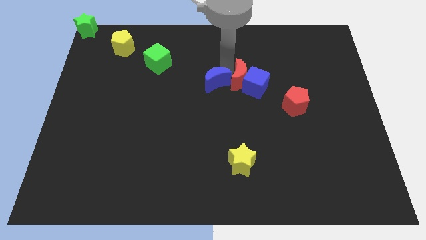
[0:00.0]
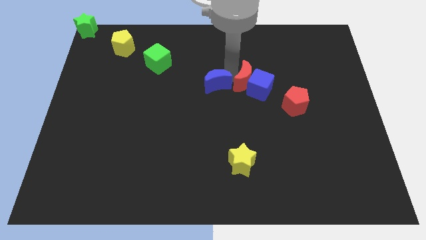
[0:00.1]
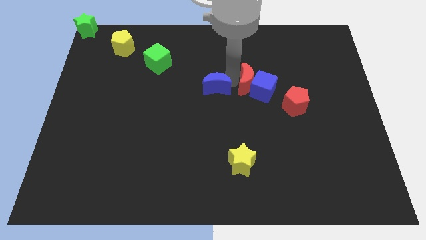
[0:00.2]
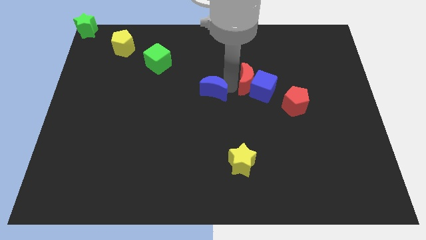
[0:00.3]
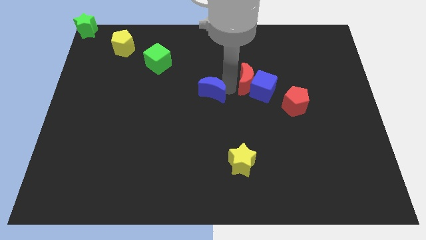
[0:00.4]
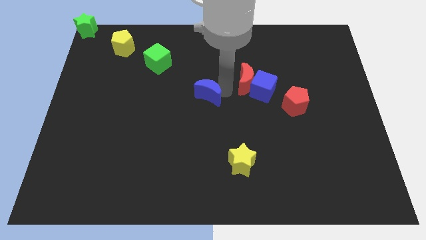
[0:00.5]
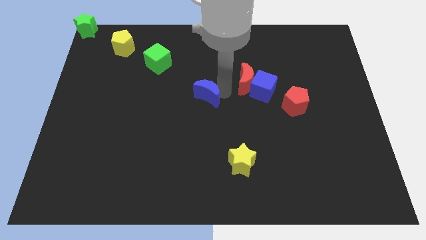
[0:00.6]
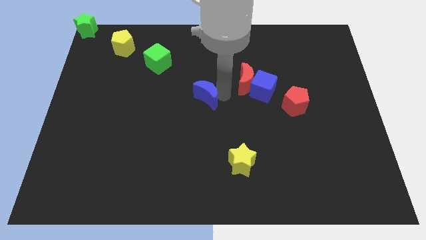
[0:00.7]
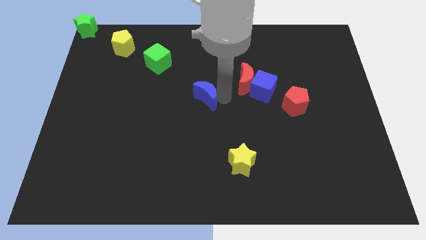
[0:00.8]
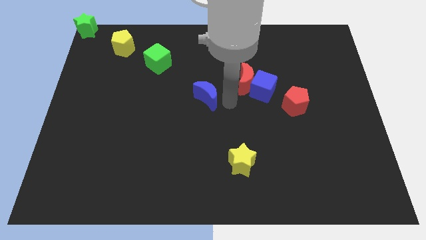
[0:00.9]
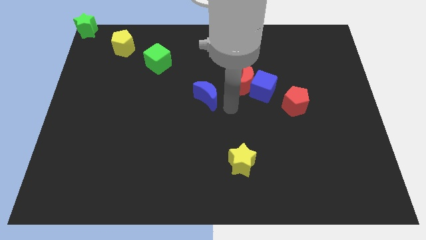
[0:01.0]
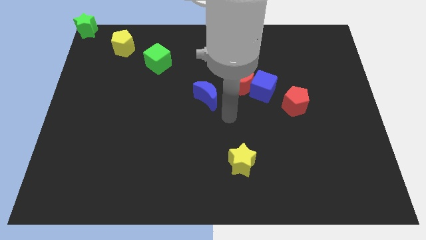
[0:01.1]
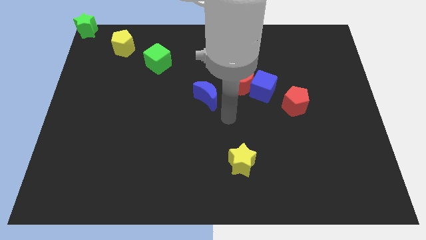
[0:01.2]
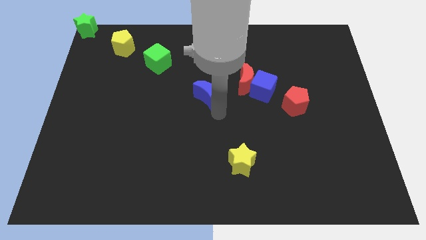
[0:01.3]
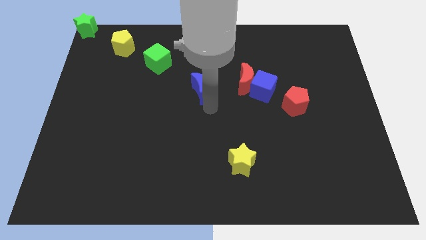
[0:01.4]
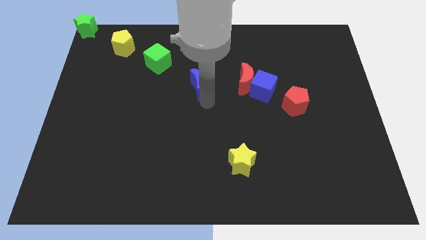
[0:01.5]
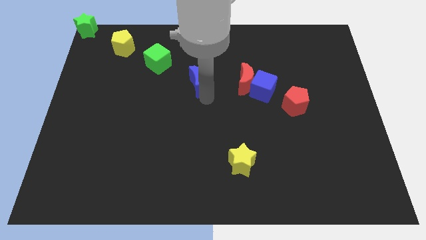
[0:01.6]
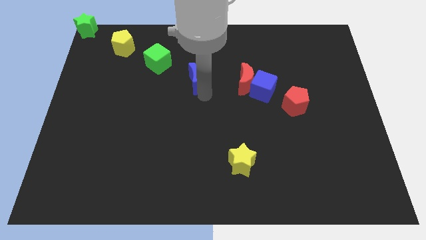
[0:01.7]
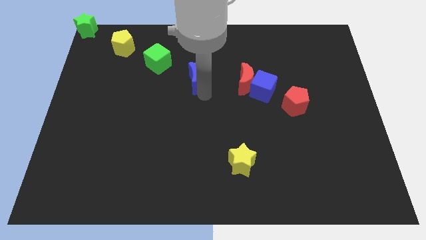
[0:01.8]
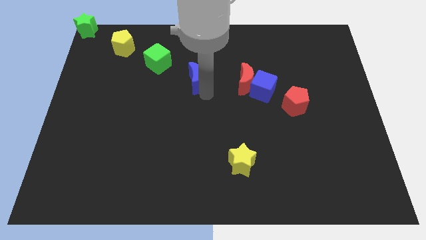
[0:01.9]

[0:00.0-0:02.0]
move the blue crescent away from the left side of the red moon

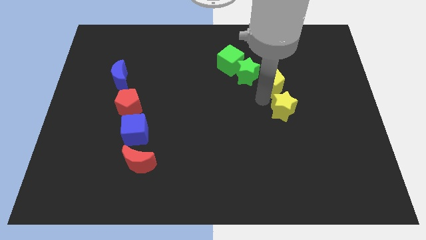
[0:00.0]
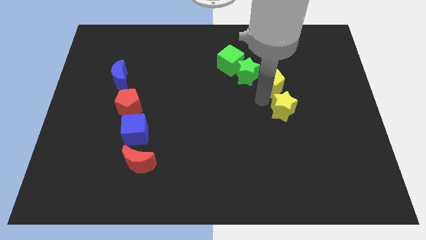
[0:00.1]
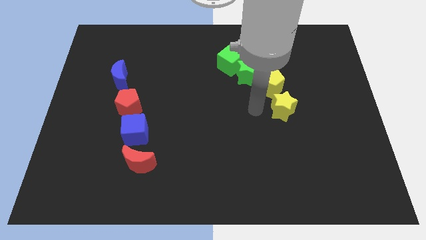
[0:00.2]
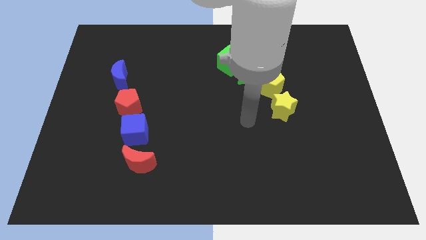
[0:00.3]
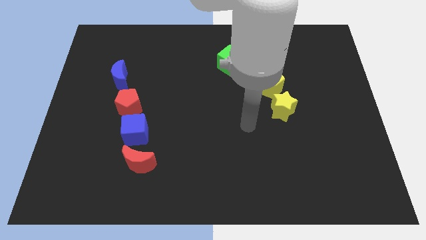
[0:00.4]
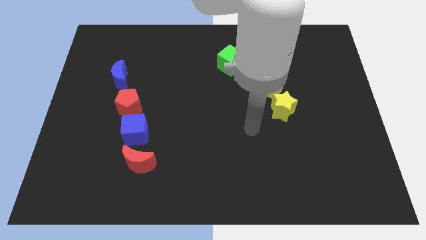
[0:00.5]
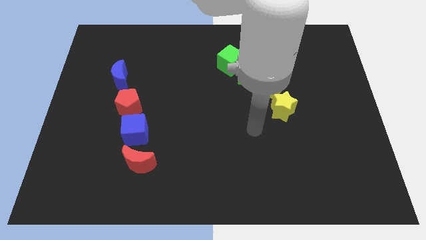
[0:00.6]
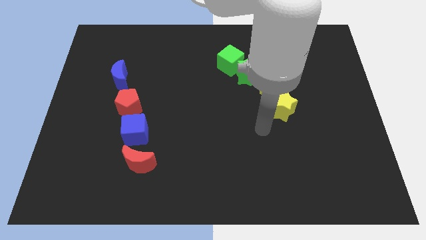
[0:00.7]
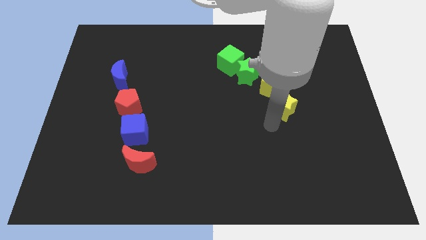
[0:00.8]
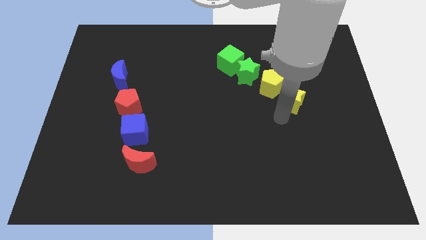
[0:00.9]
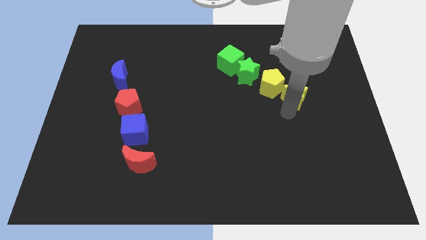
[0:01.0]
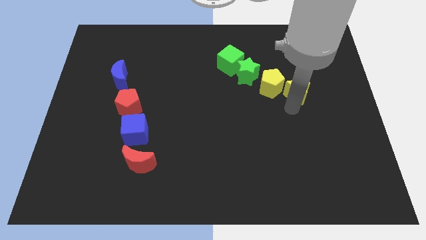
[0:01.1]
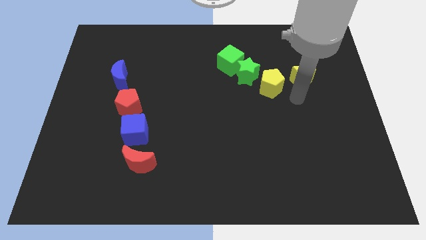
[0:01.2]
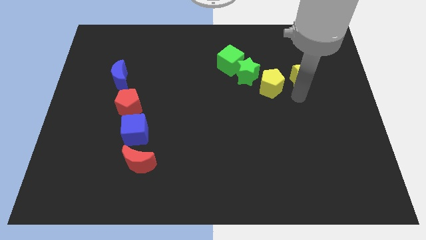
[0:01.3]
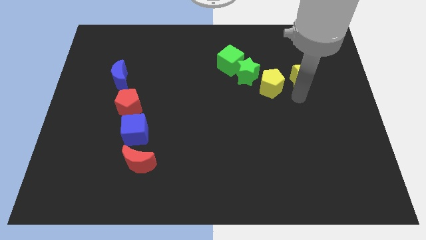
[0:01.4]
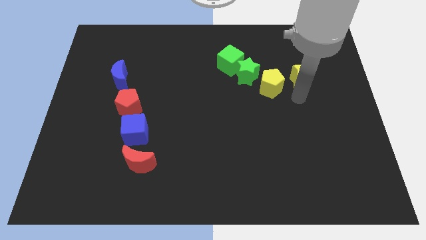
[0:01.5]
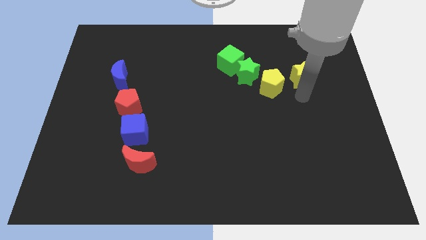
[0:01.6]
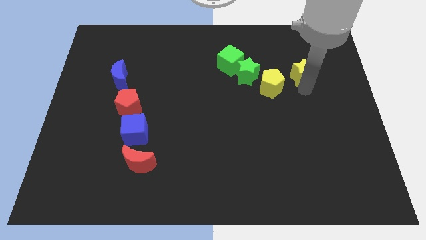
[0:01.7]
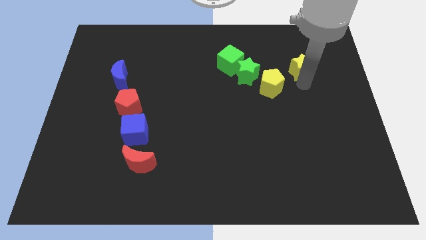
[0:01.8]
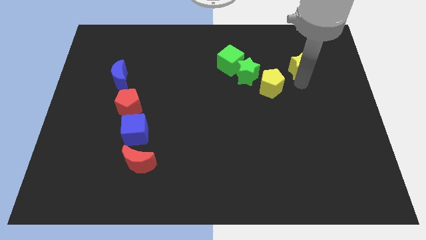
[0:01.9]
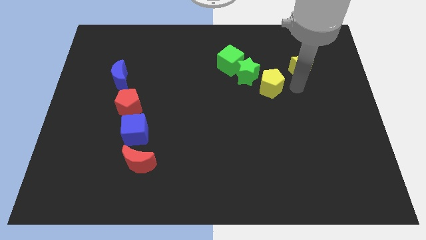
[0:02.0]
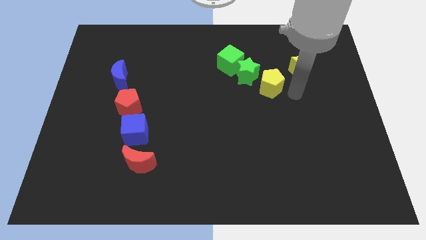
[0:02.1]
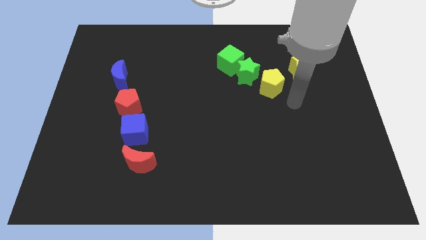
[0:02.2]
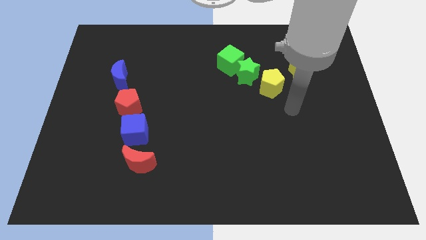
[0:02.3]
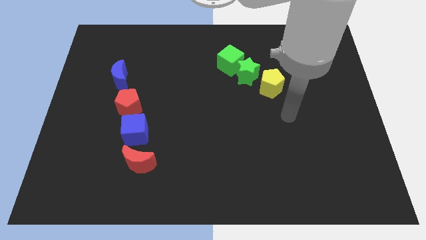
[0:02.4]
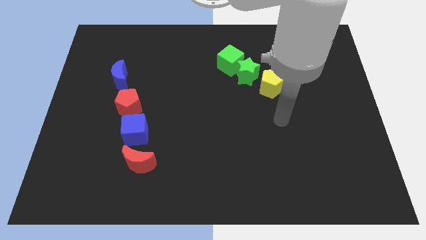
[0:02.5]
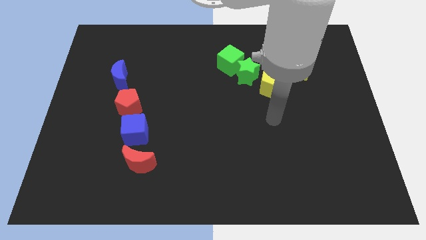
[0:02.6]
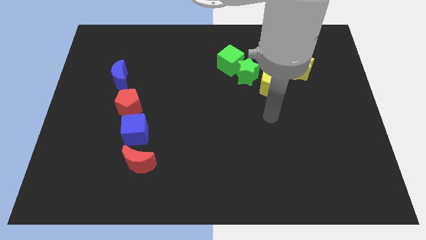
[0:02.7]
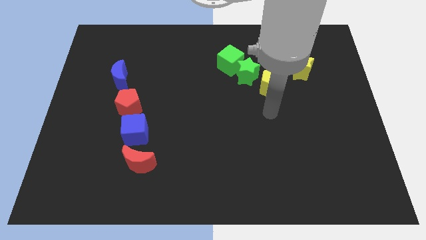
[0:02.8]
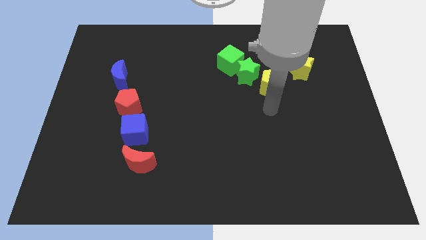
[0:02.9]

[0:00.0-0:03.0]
separate the yellow star from the yellow pentagon

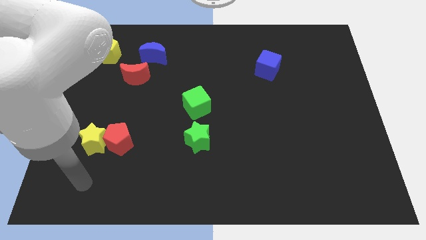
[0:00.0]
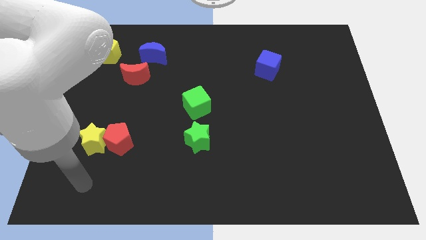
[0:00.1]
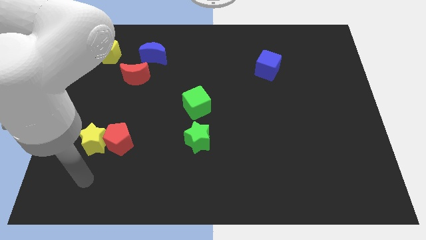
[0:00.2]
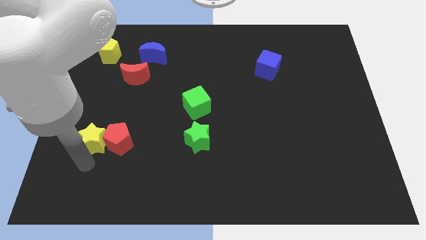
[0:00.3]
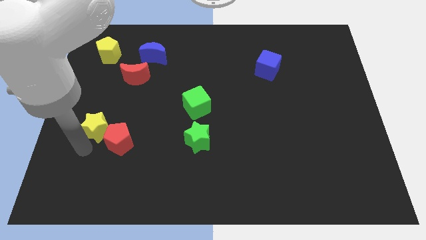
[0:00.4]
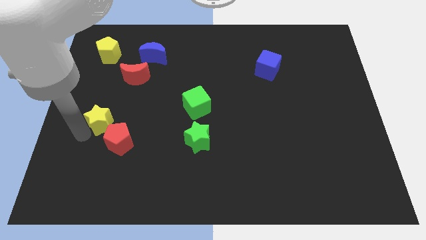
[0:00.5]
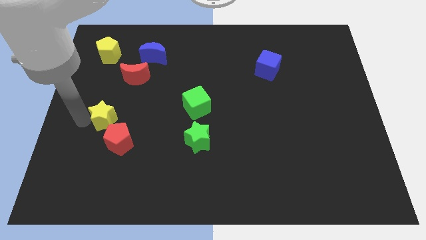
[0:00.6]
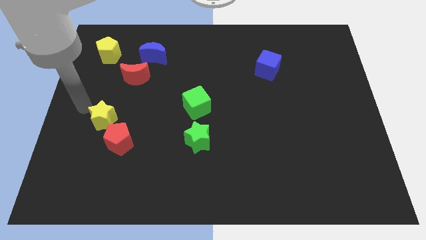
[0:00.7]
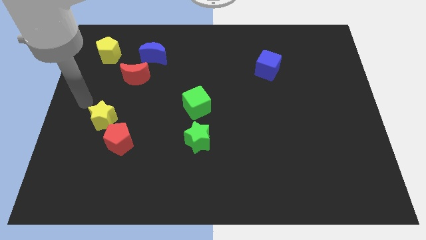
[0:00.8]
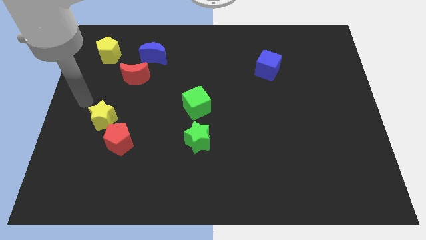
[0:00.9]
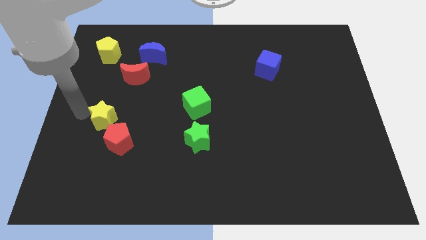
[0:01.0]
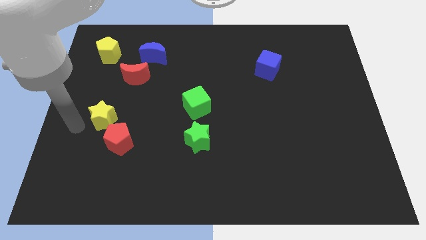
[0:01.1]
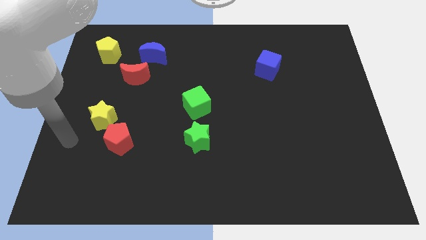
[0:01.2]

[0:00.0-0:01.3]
separate the yellow star from the red pentagon

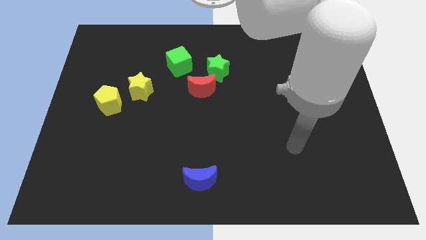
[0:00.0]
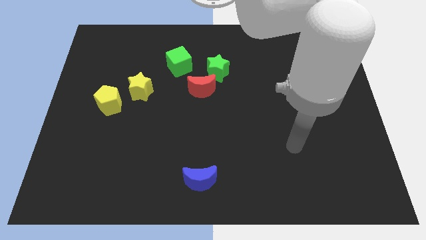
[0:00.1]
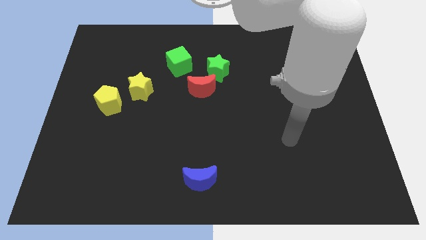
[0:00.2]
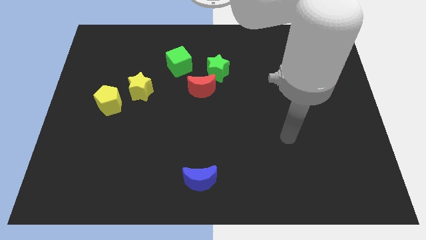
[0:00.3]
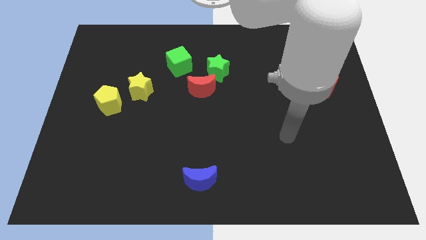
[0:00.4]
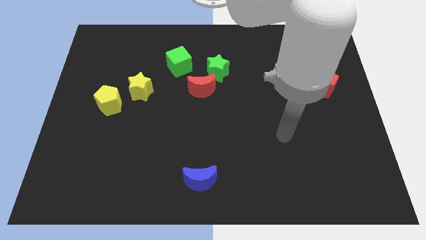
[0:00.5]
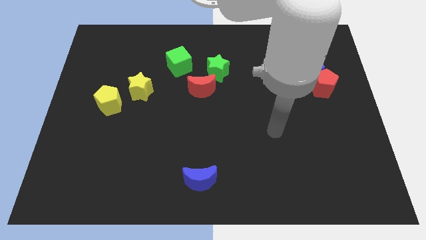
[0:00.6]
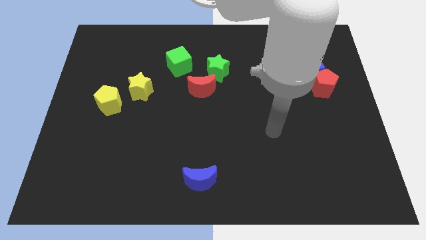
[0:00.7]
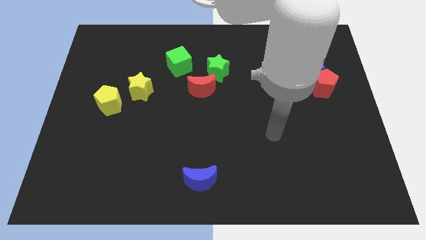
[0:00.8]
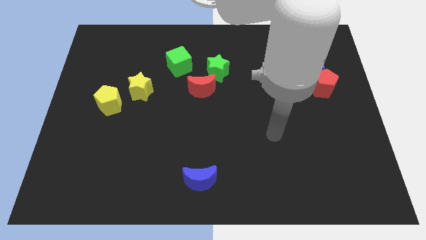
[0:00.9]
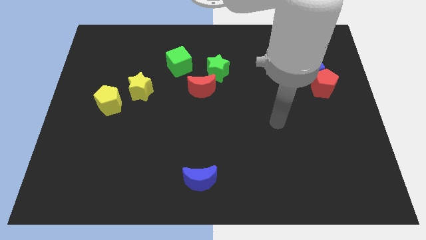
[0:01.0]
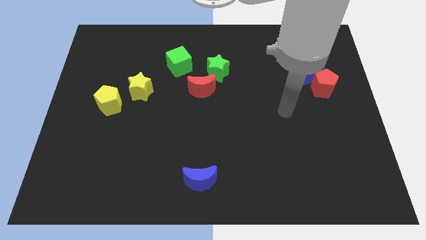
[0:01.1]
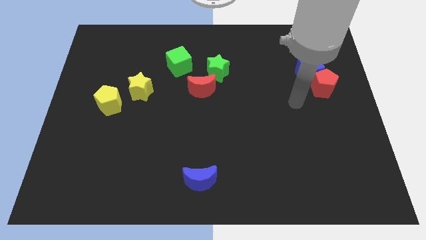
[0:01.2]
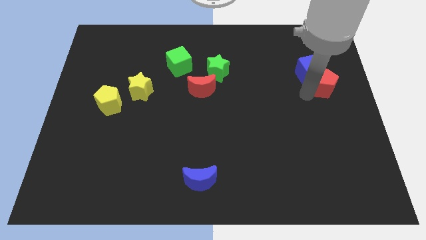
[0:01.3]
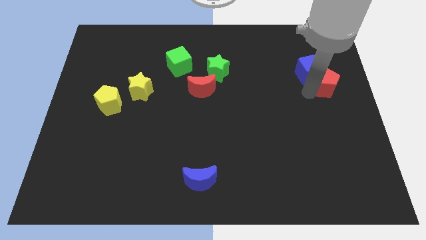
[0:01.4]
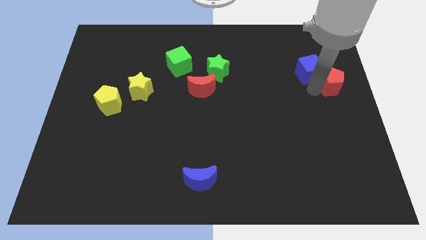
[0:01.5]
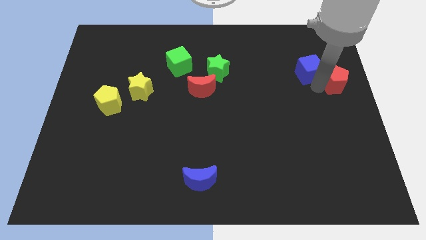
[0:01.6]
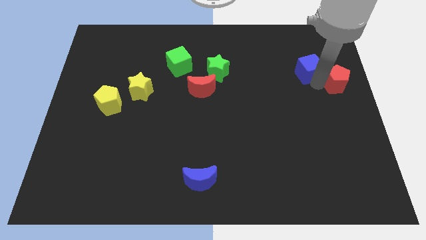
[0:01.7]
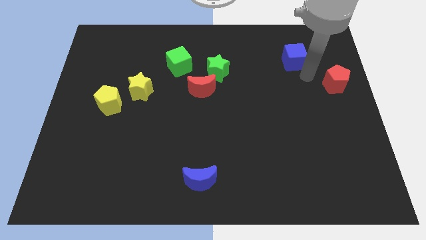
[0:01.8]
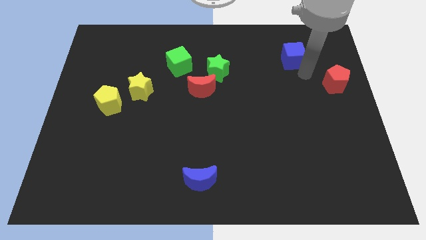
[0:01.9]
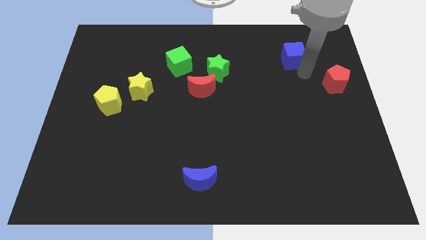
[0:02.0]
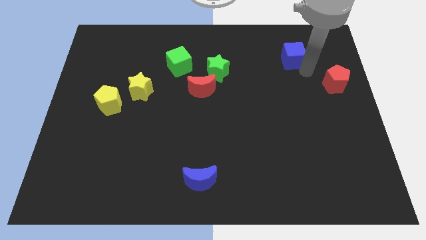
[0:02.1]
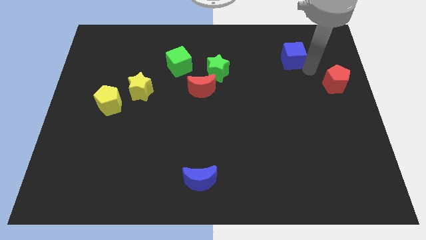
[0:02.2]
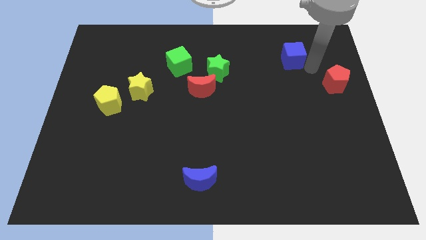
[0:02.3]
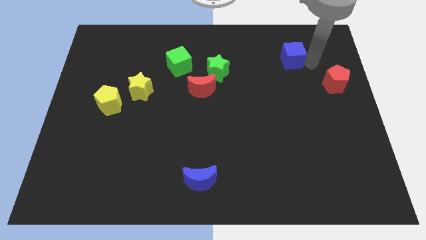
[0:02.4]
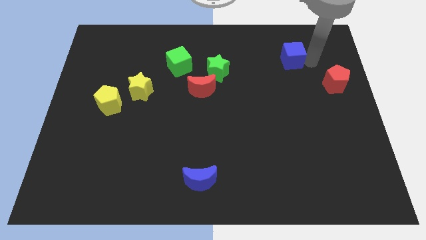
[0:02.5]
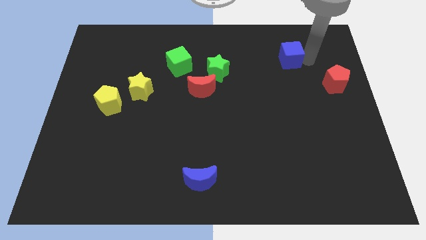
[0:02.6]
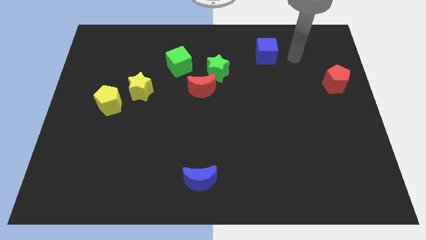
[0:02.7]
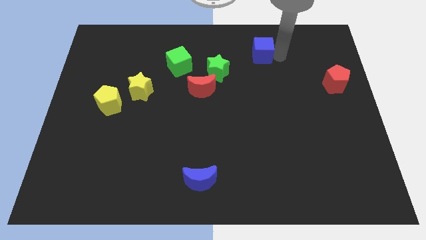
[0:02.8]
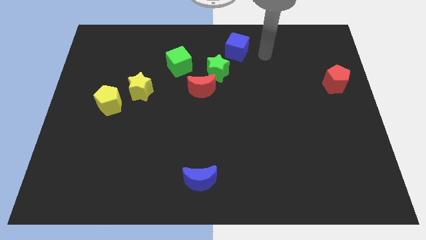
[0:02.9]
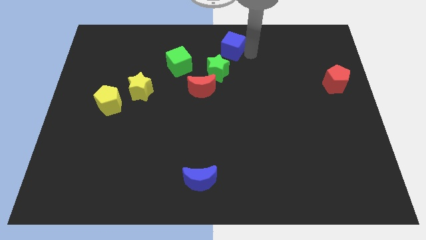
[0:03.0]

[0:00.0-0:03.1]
move the blue cube away from the red pentagon
